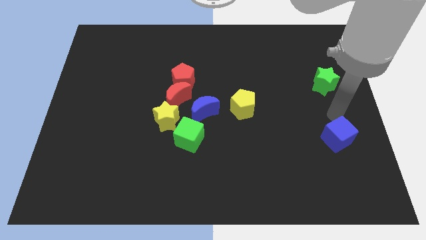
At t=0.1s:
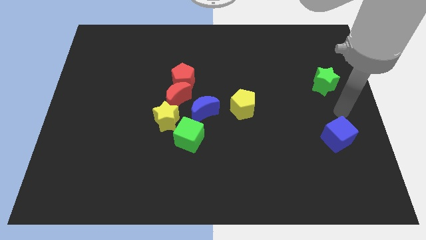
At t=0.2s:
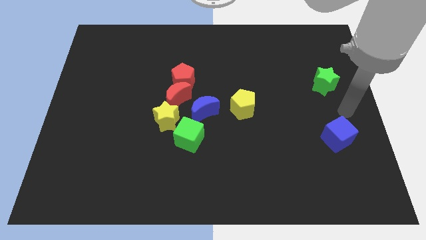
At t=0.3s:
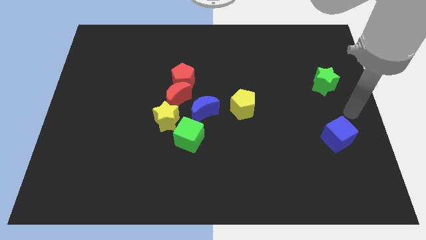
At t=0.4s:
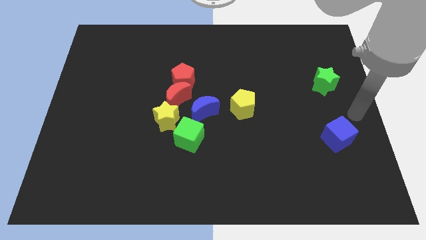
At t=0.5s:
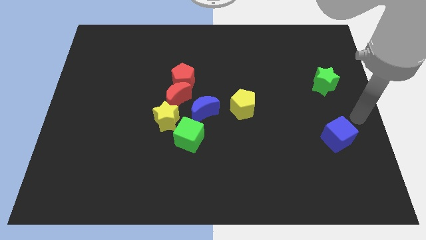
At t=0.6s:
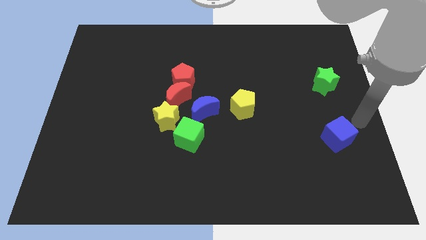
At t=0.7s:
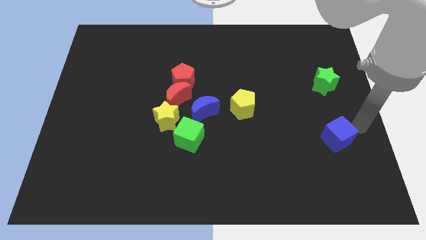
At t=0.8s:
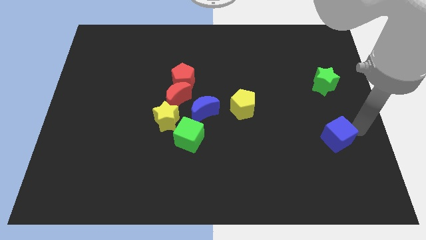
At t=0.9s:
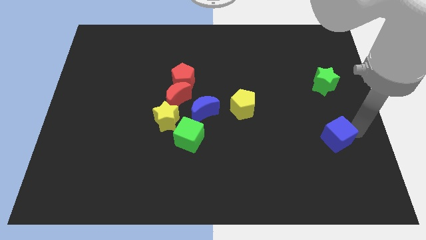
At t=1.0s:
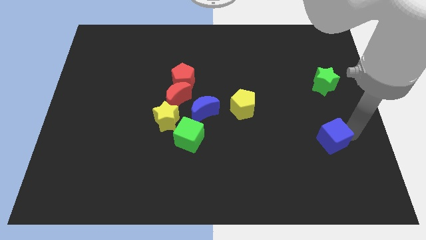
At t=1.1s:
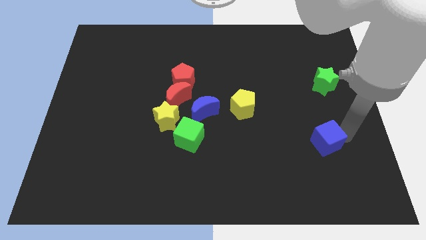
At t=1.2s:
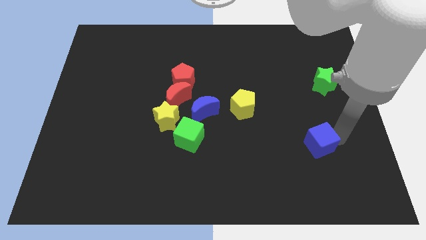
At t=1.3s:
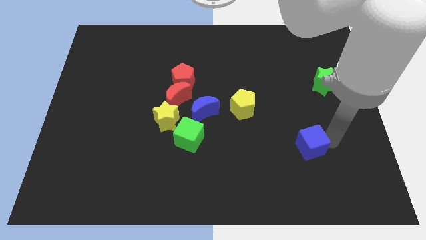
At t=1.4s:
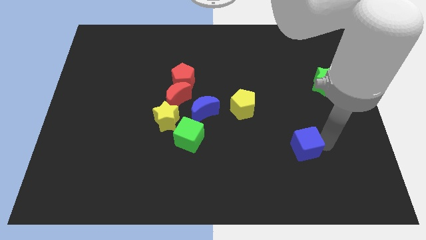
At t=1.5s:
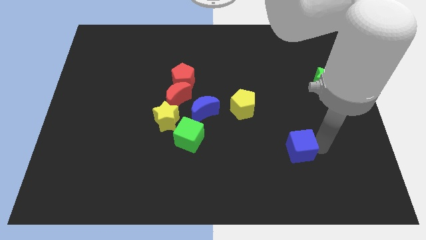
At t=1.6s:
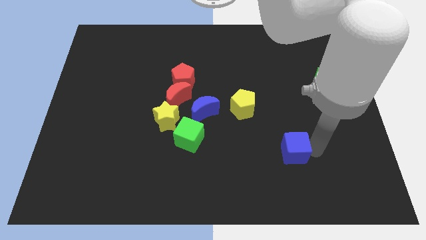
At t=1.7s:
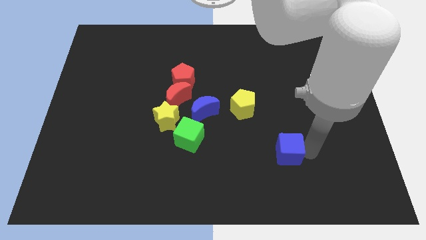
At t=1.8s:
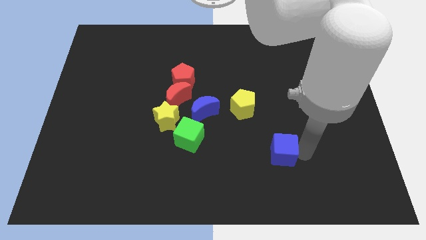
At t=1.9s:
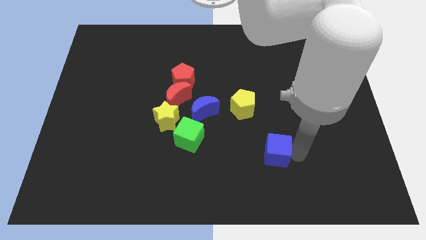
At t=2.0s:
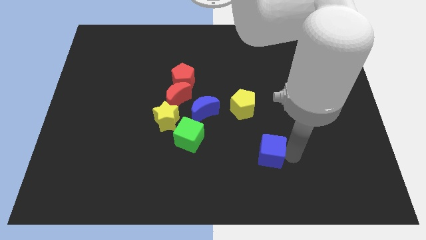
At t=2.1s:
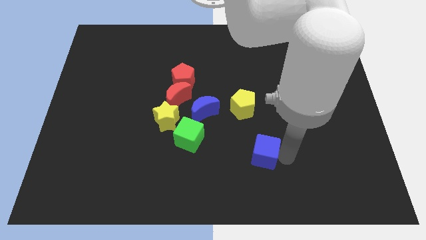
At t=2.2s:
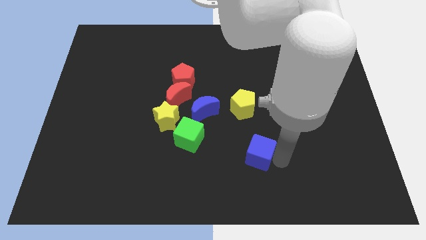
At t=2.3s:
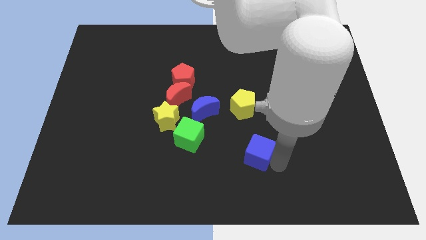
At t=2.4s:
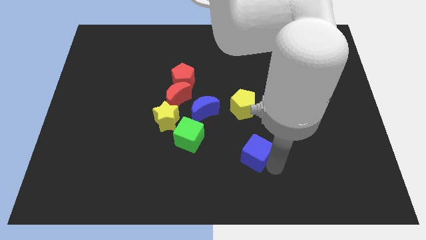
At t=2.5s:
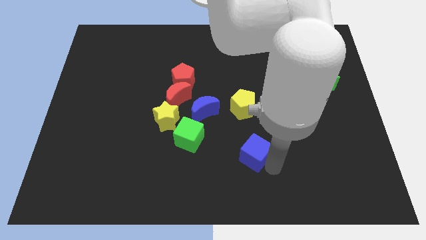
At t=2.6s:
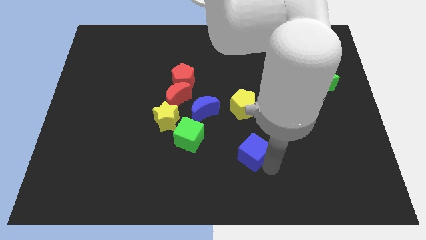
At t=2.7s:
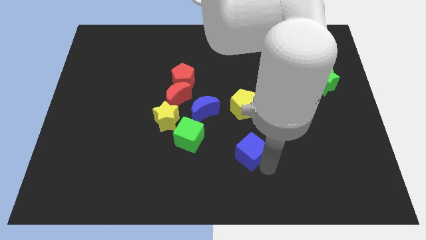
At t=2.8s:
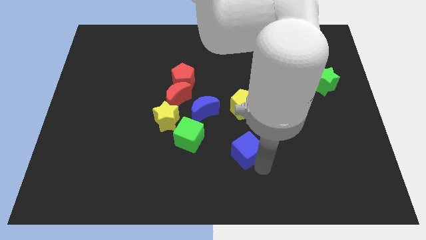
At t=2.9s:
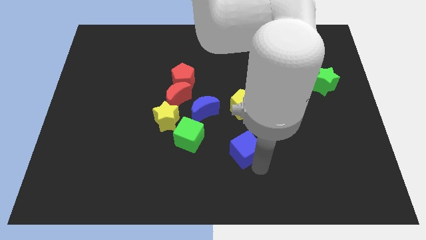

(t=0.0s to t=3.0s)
move the blue cube down to the yellow pentagon

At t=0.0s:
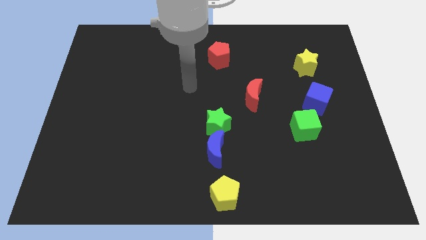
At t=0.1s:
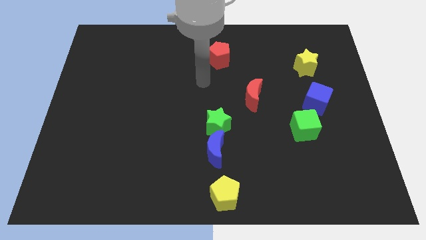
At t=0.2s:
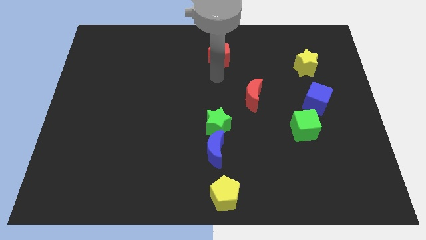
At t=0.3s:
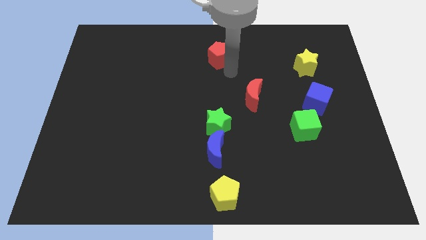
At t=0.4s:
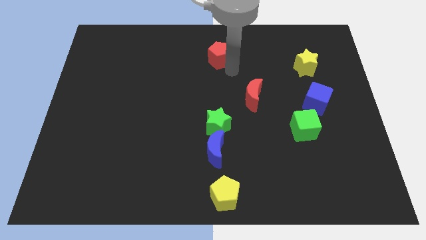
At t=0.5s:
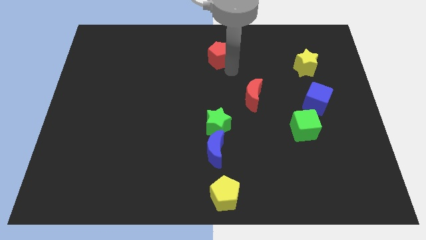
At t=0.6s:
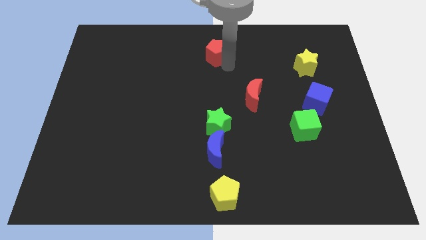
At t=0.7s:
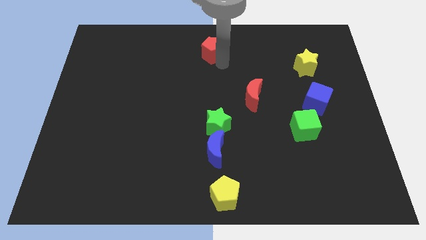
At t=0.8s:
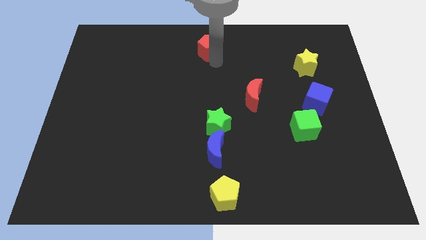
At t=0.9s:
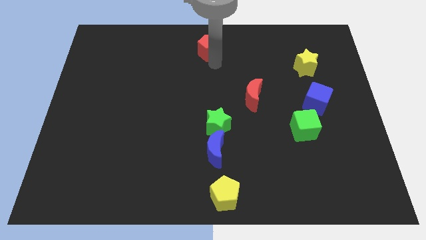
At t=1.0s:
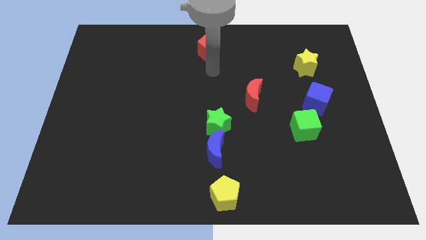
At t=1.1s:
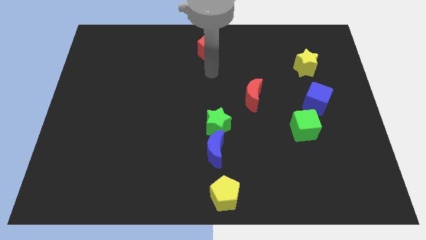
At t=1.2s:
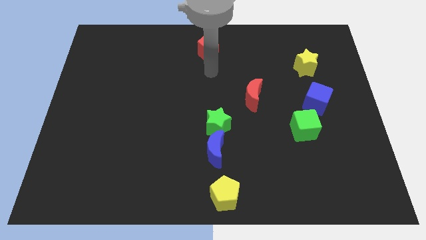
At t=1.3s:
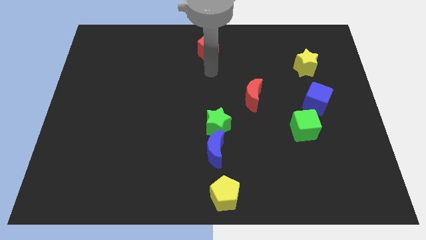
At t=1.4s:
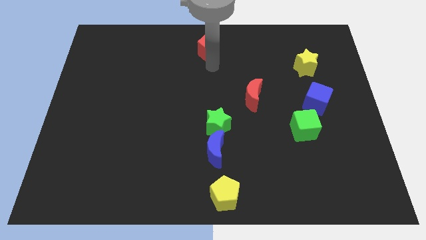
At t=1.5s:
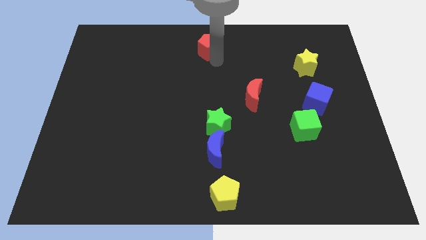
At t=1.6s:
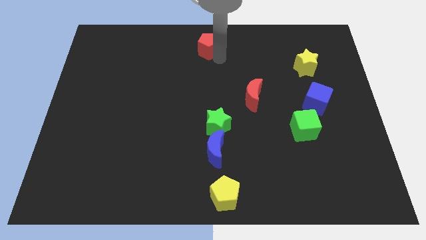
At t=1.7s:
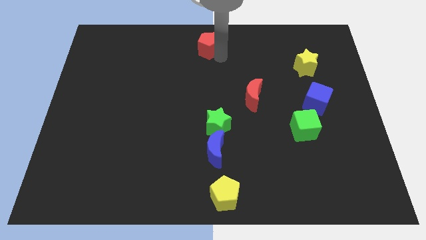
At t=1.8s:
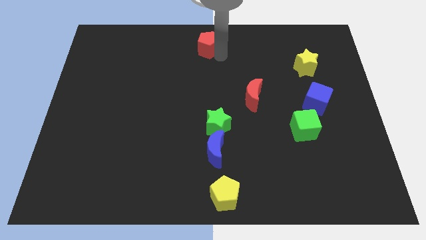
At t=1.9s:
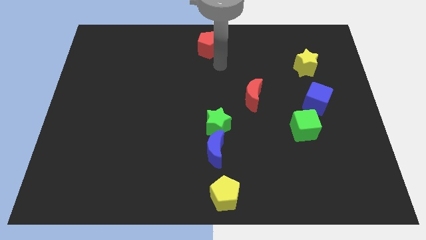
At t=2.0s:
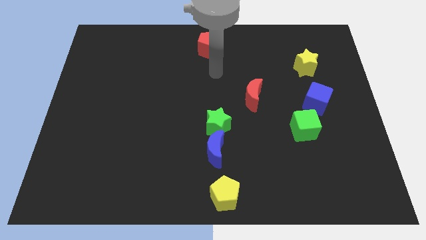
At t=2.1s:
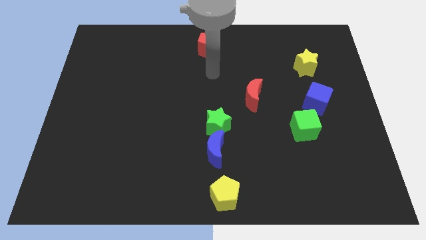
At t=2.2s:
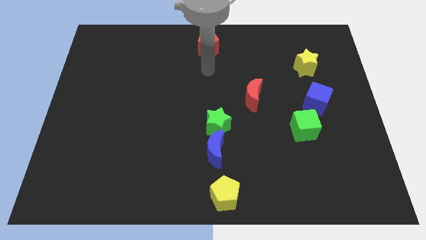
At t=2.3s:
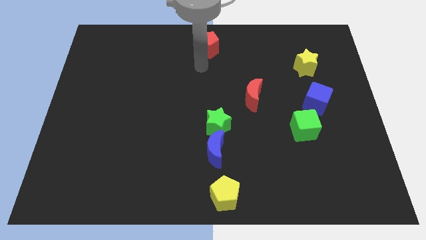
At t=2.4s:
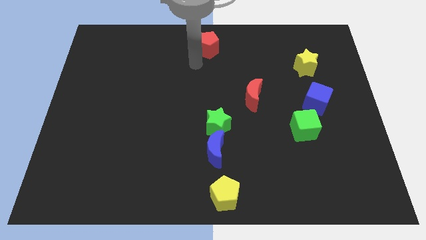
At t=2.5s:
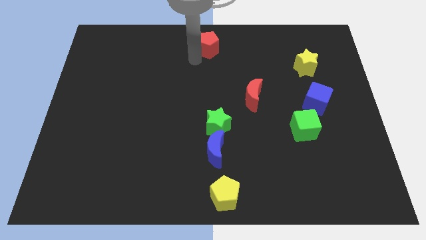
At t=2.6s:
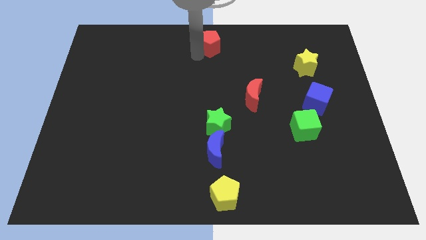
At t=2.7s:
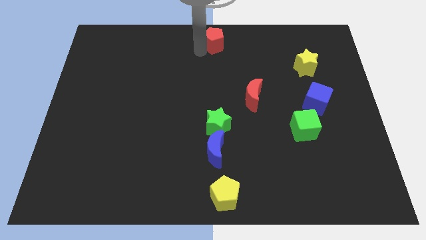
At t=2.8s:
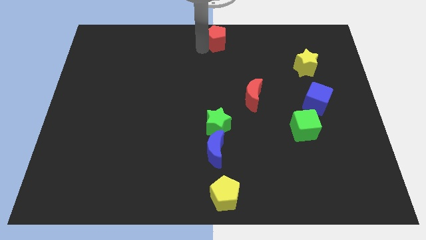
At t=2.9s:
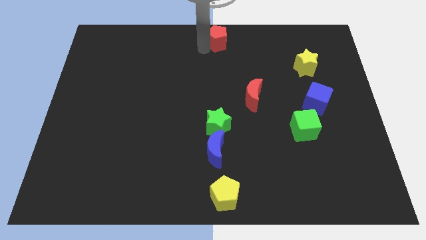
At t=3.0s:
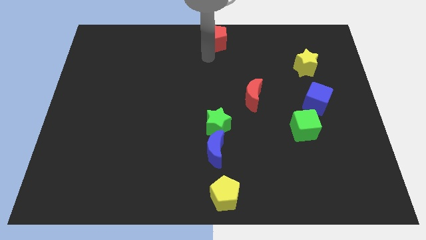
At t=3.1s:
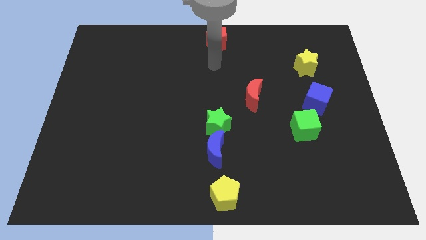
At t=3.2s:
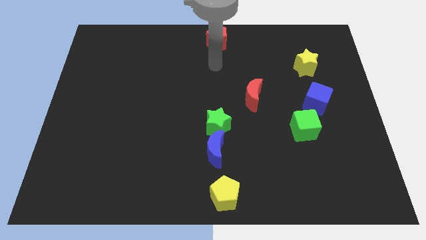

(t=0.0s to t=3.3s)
move the red pentagon to the top center

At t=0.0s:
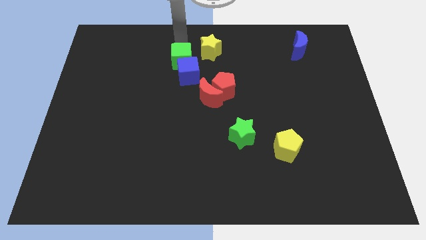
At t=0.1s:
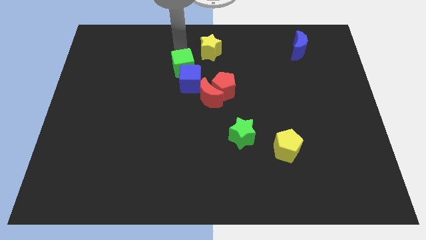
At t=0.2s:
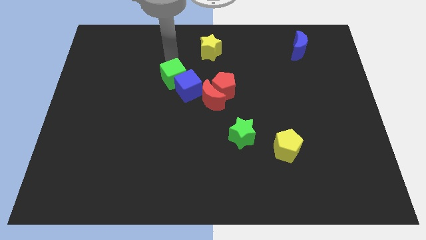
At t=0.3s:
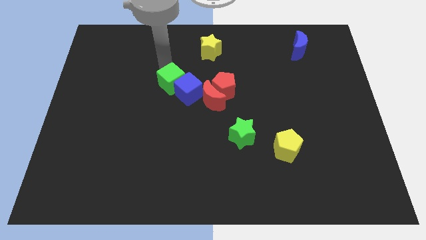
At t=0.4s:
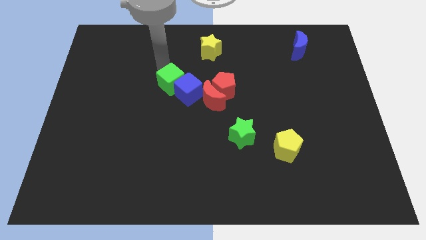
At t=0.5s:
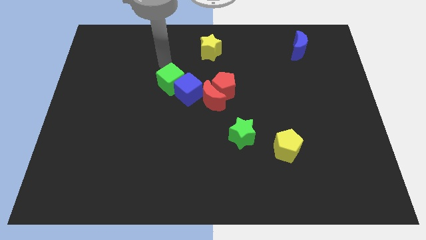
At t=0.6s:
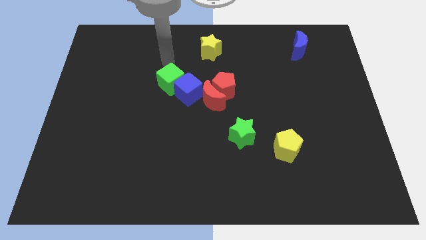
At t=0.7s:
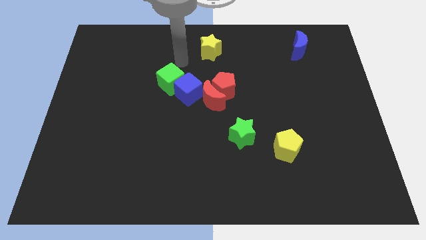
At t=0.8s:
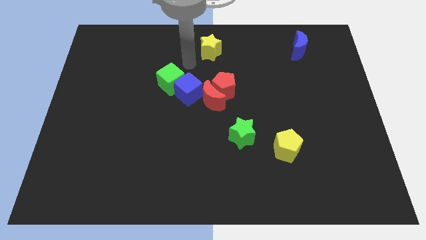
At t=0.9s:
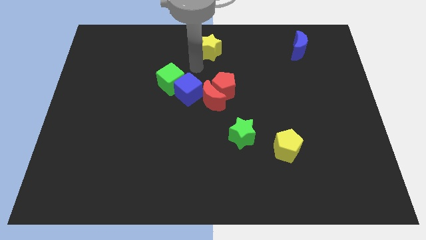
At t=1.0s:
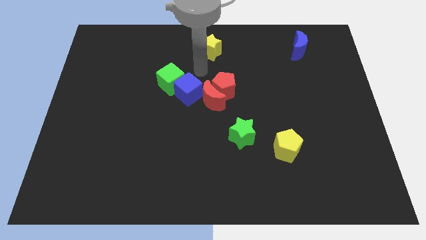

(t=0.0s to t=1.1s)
move cubes slightly down

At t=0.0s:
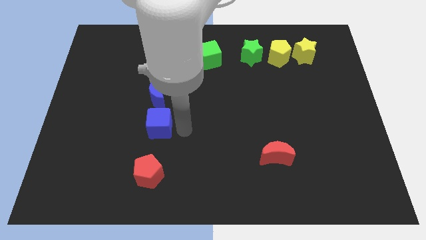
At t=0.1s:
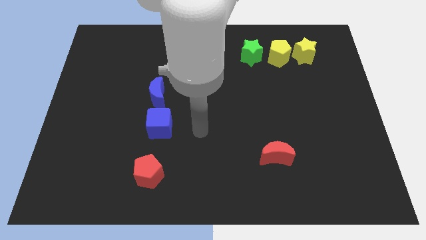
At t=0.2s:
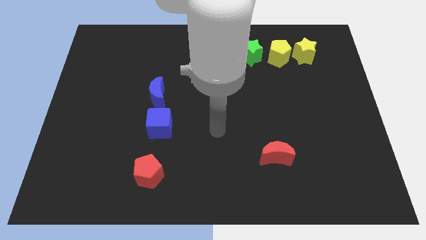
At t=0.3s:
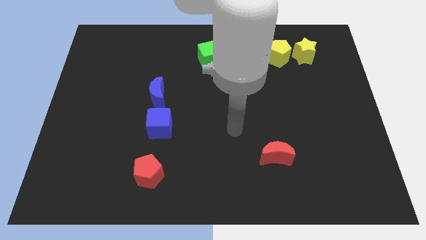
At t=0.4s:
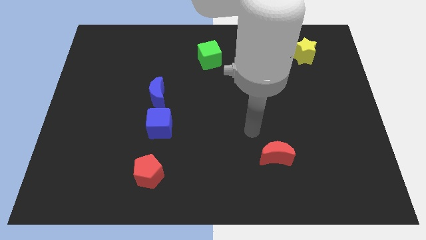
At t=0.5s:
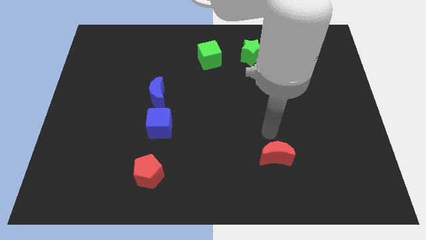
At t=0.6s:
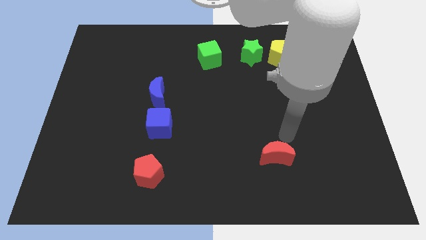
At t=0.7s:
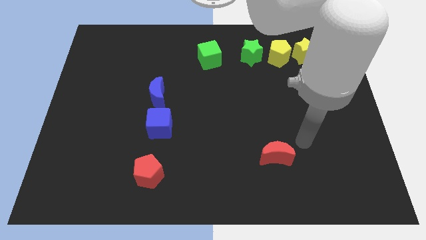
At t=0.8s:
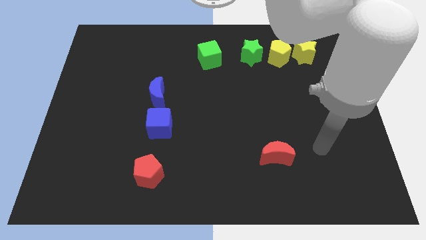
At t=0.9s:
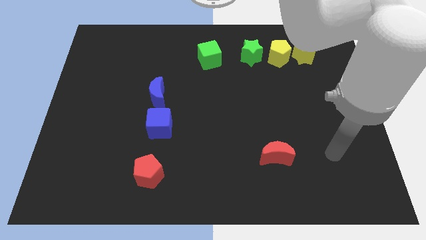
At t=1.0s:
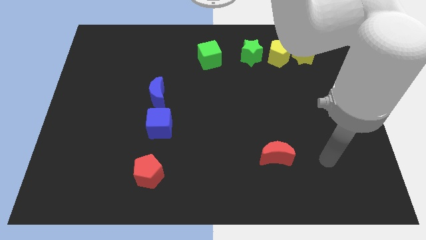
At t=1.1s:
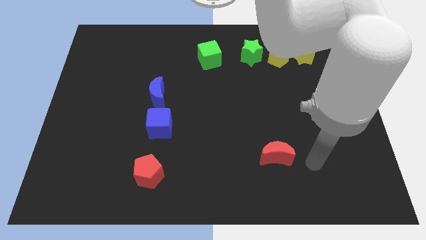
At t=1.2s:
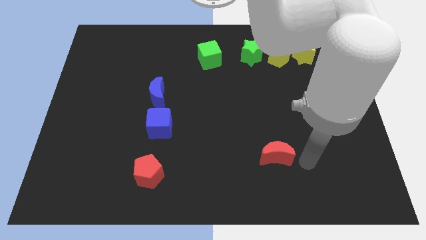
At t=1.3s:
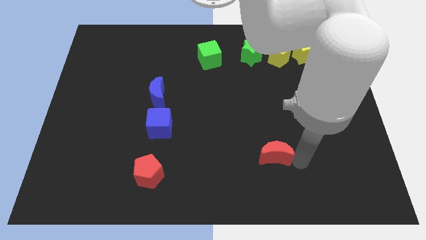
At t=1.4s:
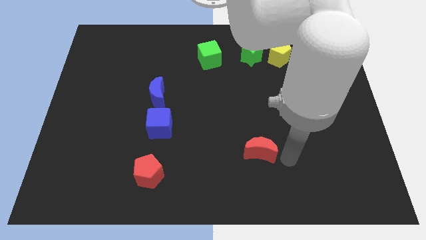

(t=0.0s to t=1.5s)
point your arm right to red moon
